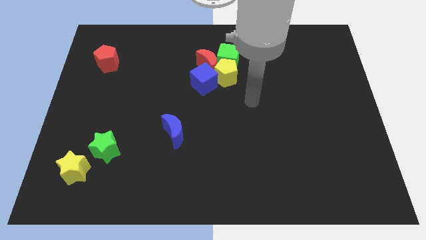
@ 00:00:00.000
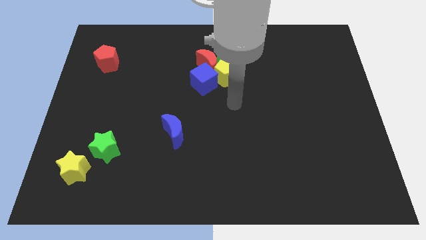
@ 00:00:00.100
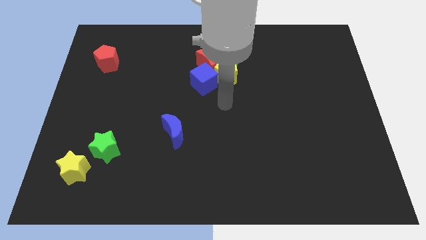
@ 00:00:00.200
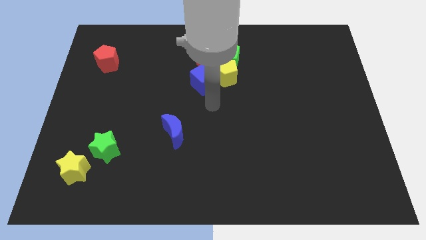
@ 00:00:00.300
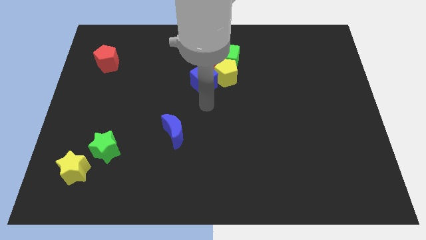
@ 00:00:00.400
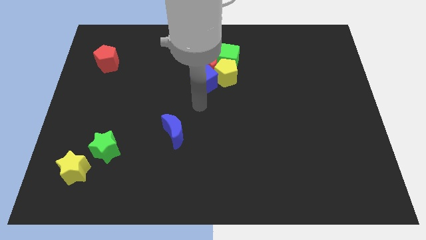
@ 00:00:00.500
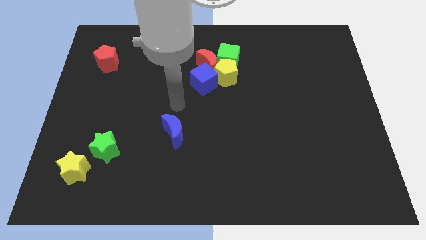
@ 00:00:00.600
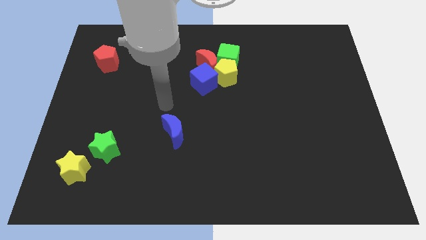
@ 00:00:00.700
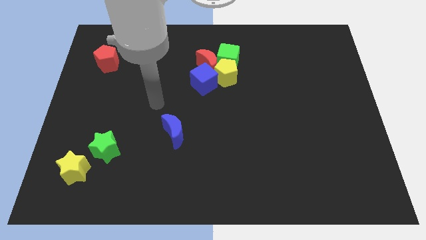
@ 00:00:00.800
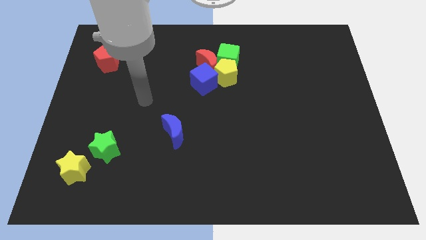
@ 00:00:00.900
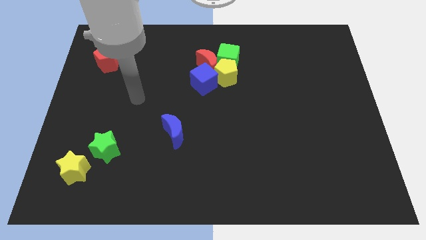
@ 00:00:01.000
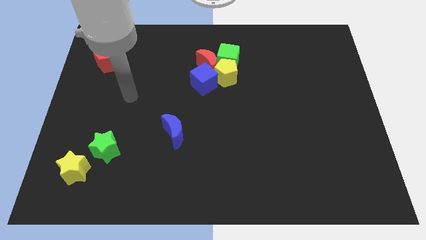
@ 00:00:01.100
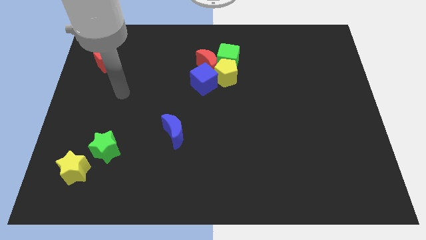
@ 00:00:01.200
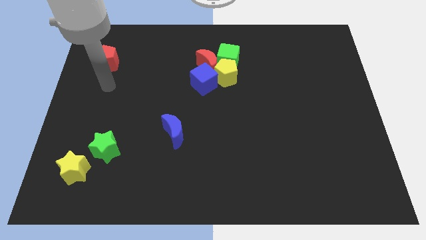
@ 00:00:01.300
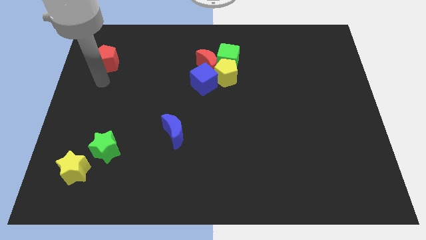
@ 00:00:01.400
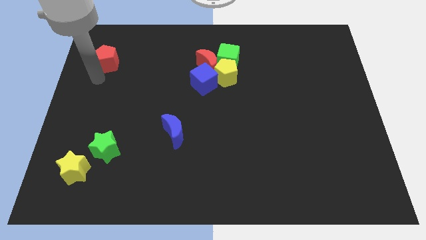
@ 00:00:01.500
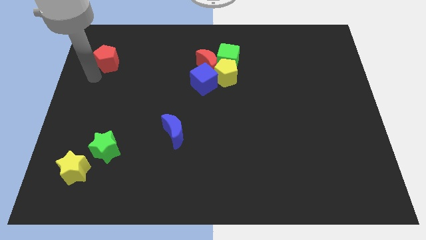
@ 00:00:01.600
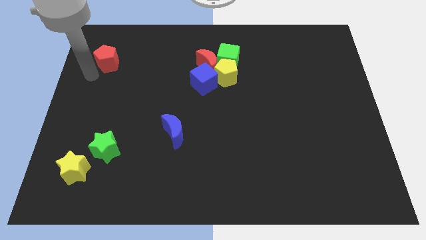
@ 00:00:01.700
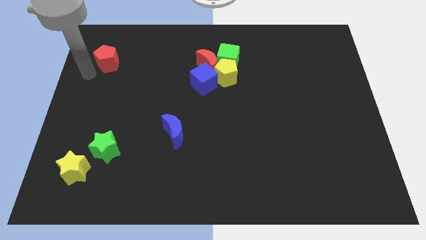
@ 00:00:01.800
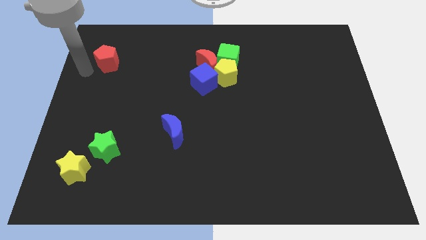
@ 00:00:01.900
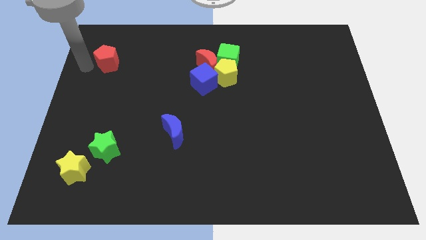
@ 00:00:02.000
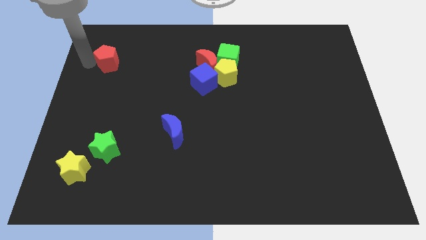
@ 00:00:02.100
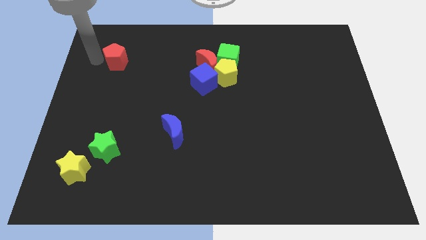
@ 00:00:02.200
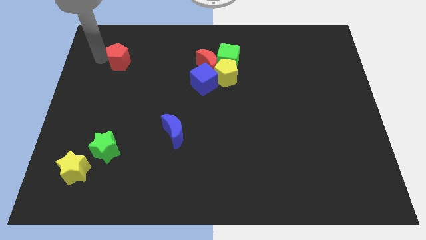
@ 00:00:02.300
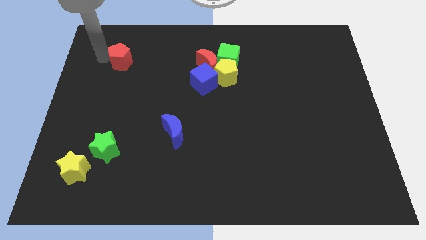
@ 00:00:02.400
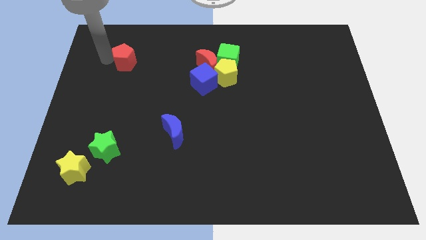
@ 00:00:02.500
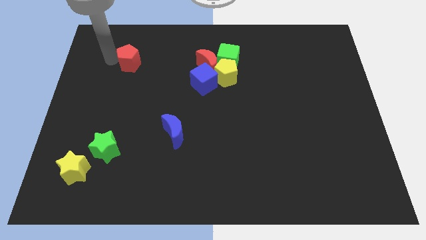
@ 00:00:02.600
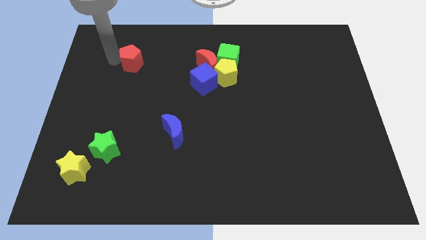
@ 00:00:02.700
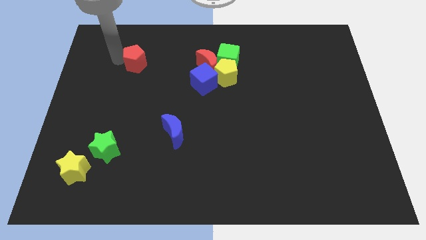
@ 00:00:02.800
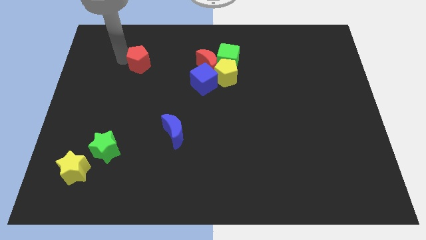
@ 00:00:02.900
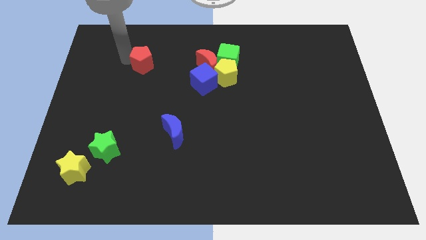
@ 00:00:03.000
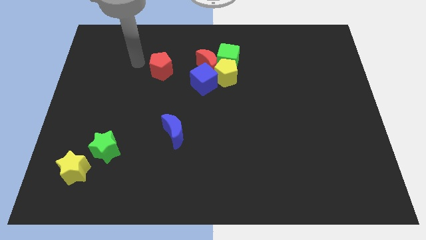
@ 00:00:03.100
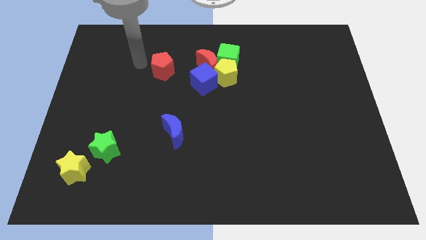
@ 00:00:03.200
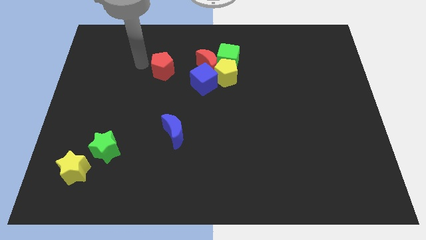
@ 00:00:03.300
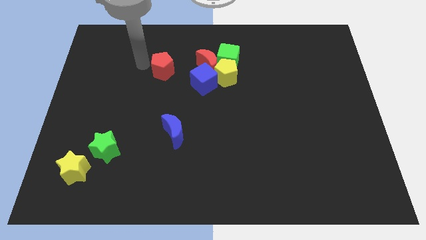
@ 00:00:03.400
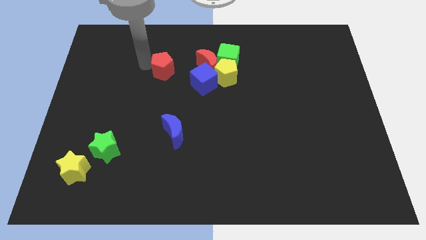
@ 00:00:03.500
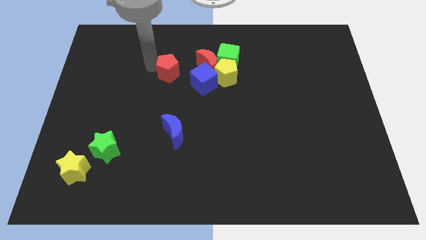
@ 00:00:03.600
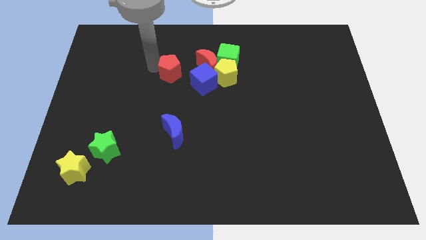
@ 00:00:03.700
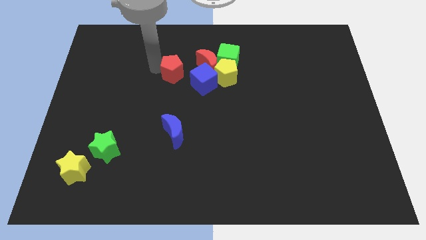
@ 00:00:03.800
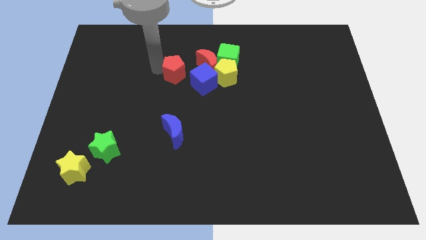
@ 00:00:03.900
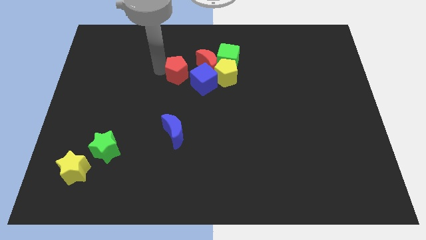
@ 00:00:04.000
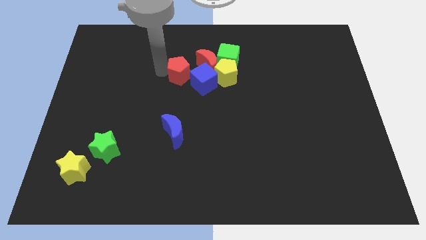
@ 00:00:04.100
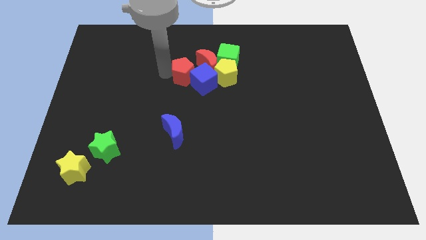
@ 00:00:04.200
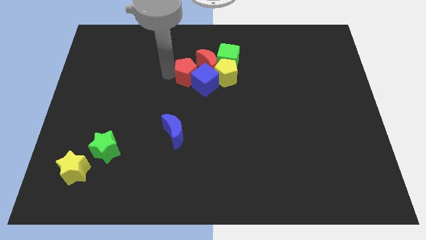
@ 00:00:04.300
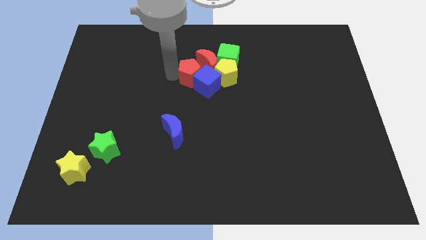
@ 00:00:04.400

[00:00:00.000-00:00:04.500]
put the red pentagon to the blue cube

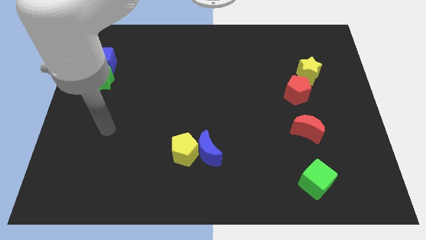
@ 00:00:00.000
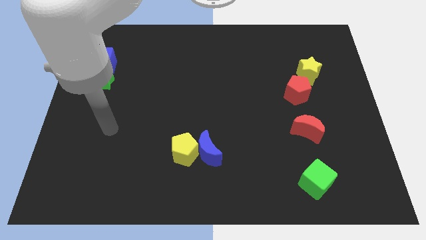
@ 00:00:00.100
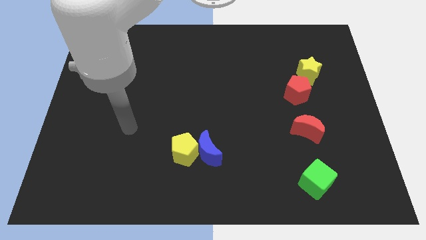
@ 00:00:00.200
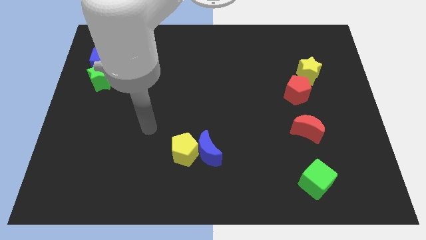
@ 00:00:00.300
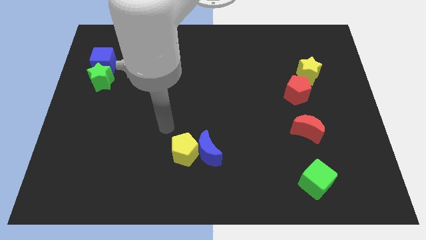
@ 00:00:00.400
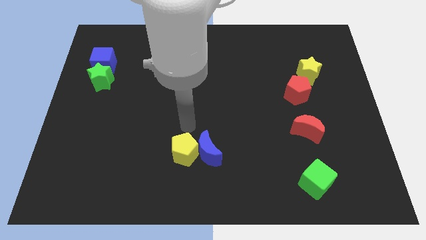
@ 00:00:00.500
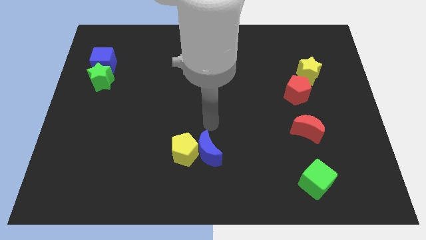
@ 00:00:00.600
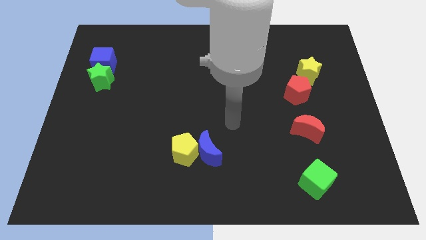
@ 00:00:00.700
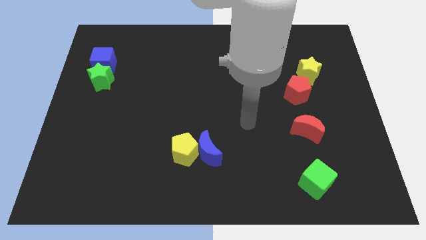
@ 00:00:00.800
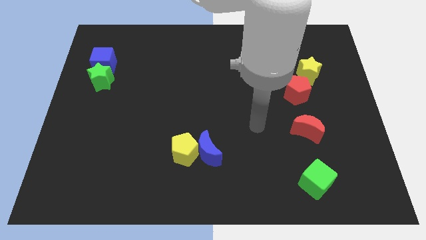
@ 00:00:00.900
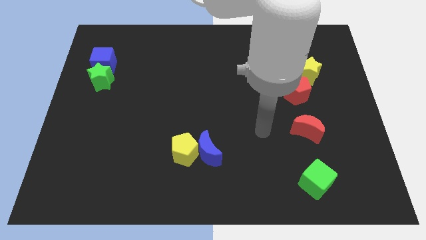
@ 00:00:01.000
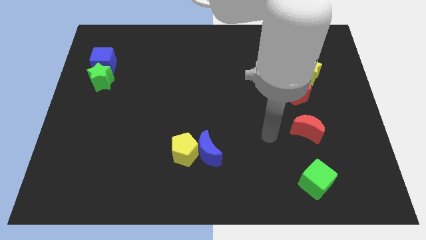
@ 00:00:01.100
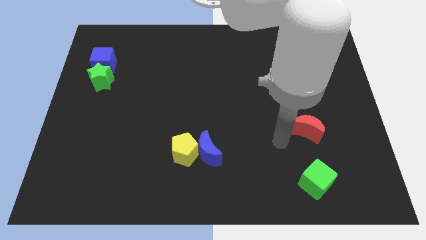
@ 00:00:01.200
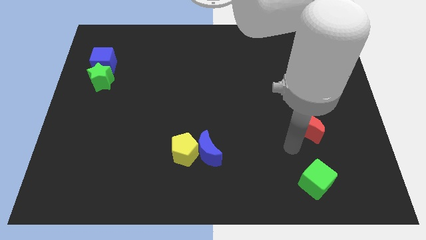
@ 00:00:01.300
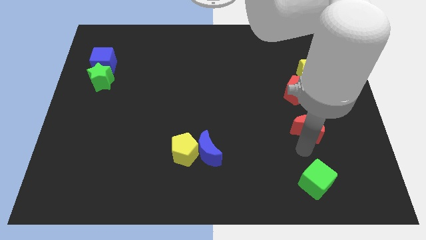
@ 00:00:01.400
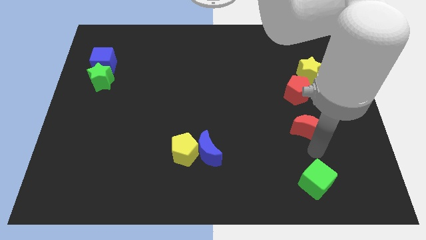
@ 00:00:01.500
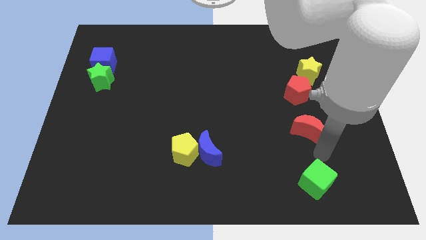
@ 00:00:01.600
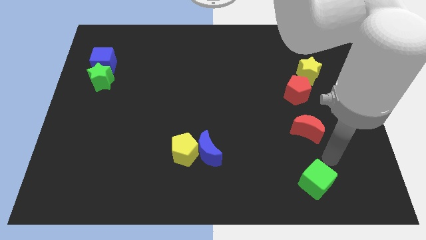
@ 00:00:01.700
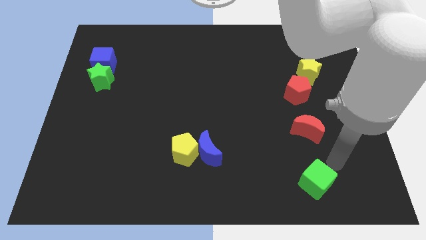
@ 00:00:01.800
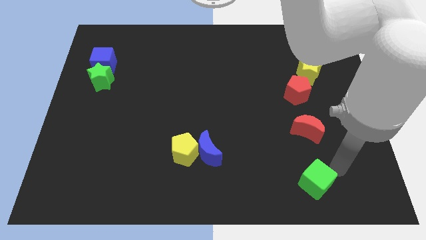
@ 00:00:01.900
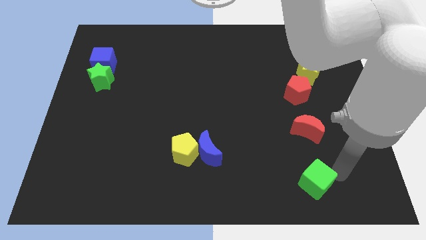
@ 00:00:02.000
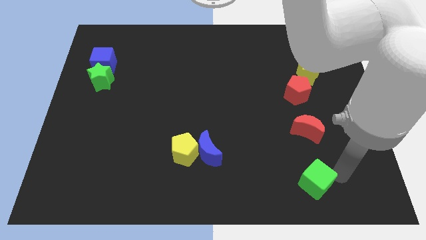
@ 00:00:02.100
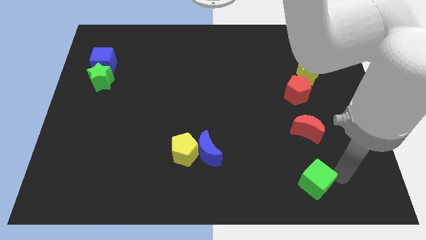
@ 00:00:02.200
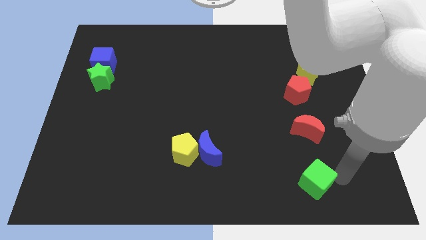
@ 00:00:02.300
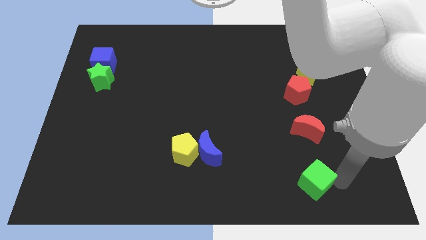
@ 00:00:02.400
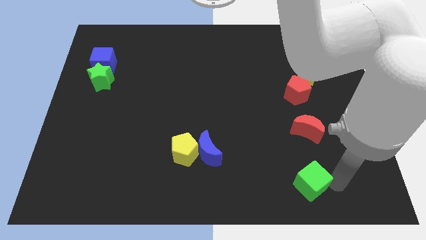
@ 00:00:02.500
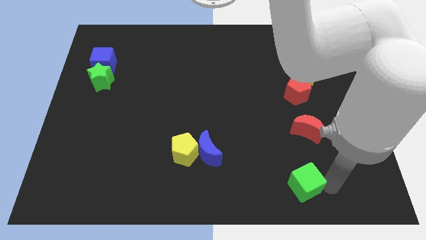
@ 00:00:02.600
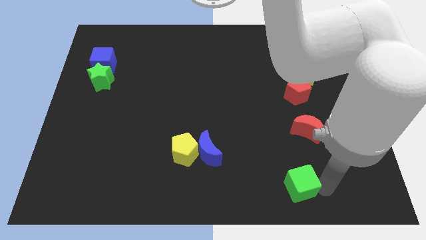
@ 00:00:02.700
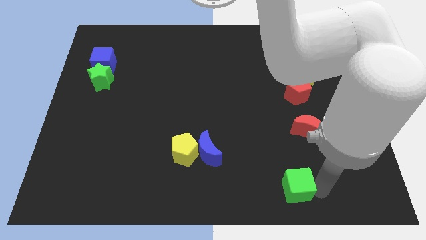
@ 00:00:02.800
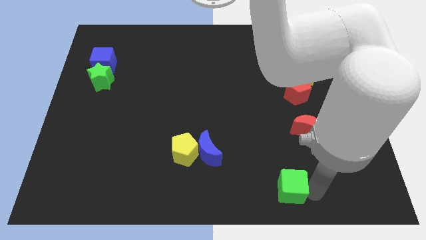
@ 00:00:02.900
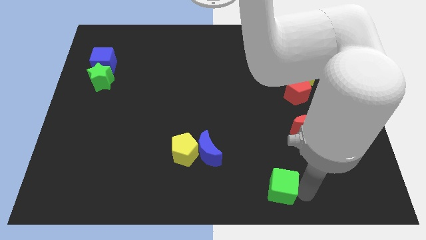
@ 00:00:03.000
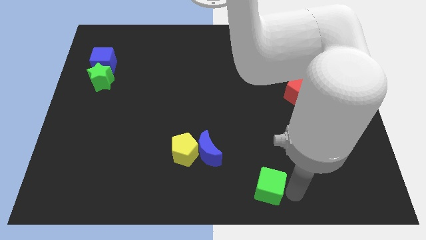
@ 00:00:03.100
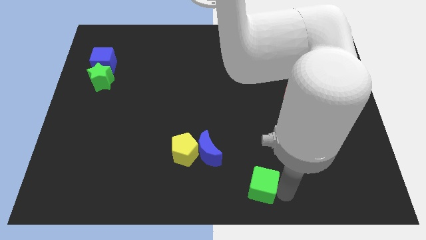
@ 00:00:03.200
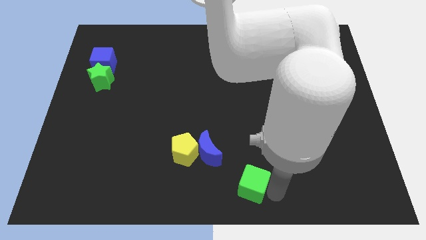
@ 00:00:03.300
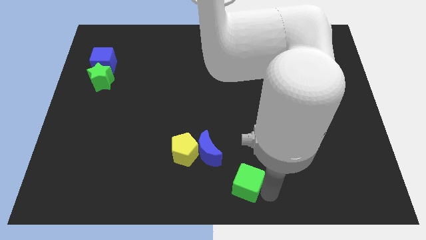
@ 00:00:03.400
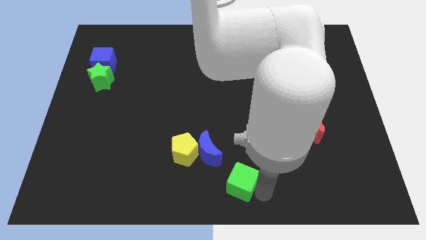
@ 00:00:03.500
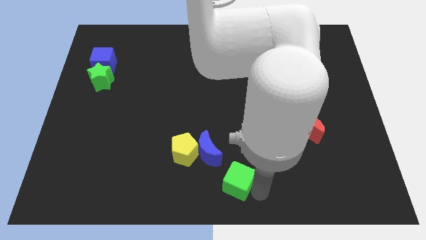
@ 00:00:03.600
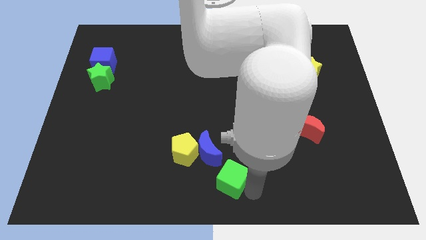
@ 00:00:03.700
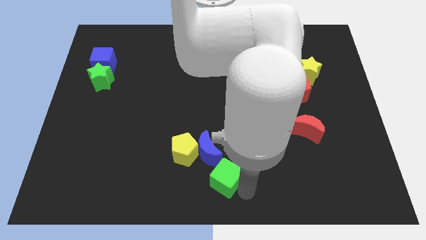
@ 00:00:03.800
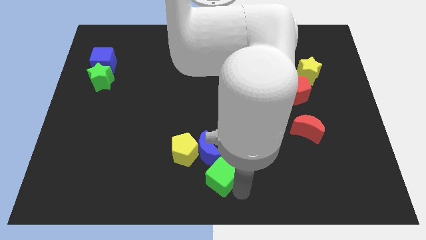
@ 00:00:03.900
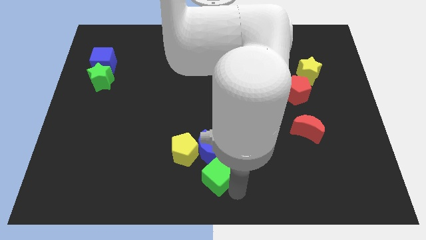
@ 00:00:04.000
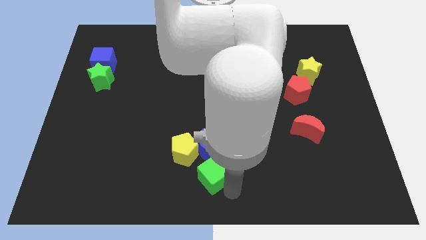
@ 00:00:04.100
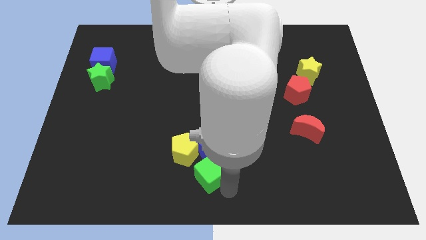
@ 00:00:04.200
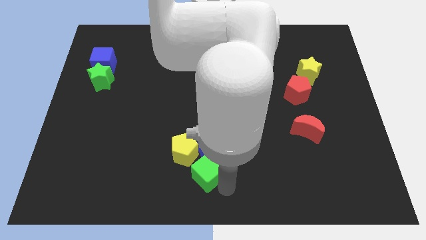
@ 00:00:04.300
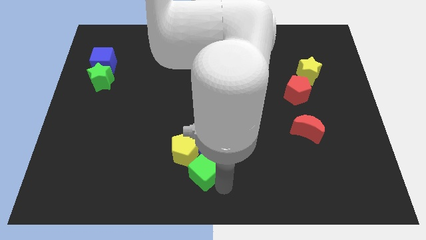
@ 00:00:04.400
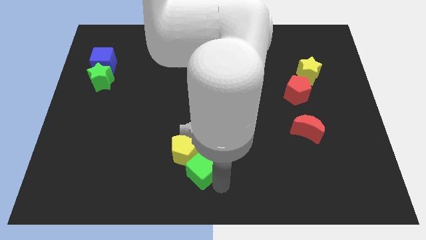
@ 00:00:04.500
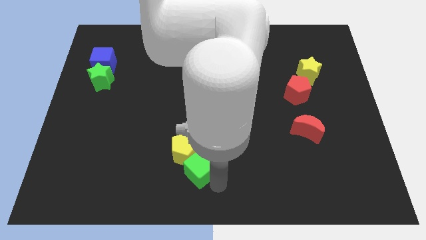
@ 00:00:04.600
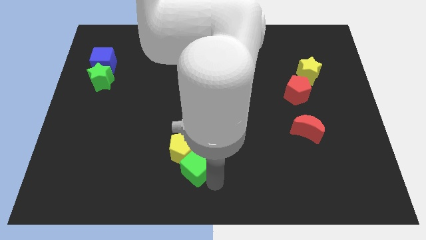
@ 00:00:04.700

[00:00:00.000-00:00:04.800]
move the green cube towards the yellow pentagon
